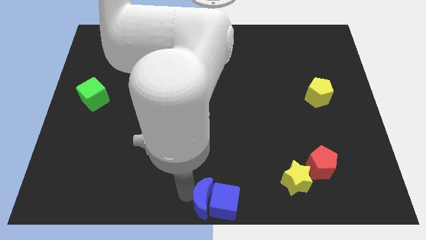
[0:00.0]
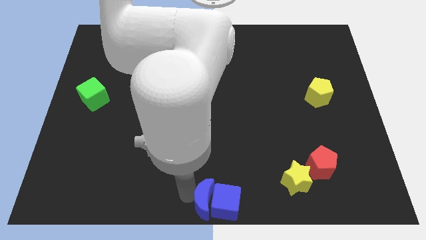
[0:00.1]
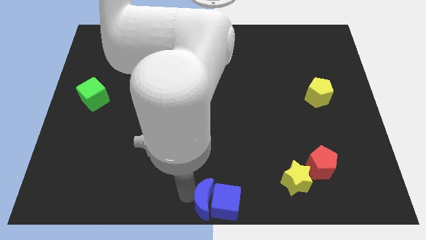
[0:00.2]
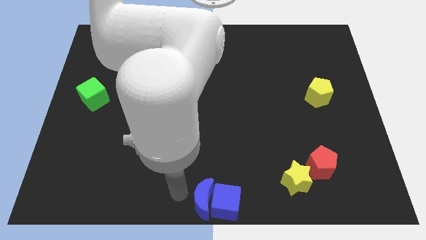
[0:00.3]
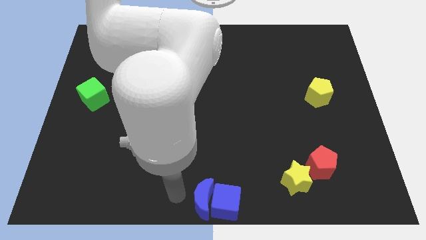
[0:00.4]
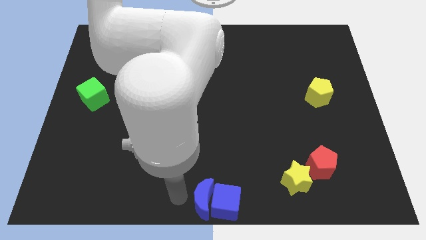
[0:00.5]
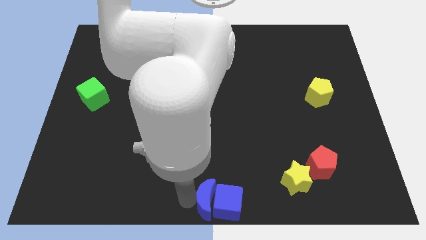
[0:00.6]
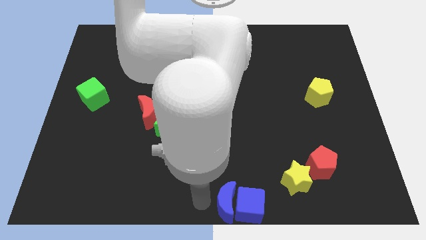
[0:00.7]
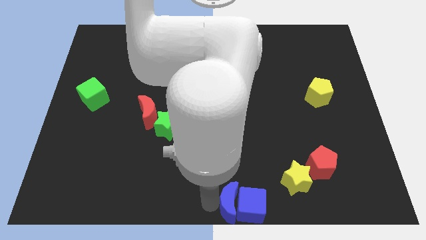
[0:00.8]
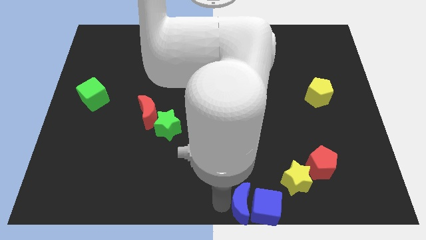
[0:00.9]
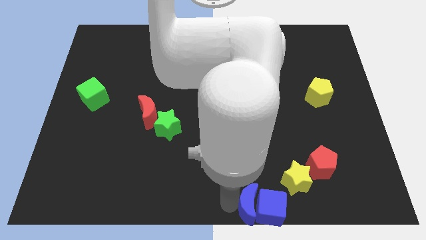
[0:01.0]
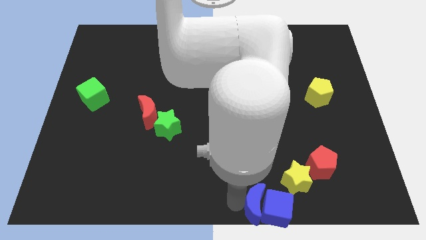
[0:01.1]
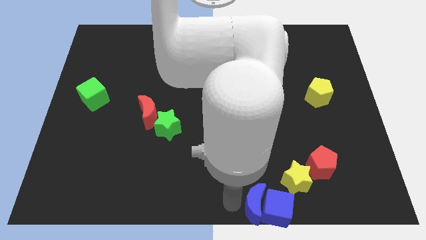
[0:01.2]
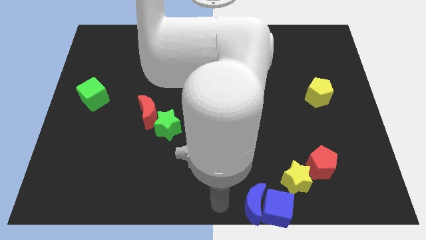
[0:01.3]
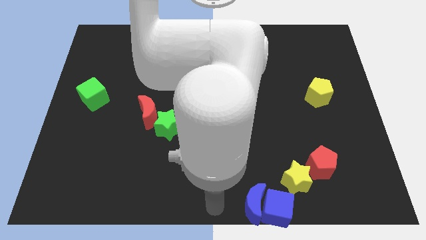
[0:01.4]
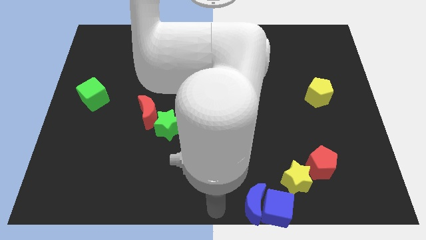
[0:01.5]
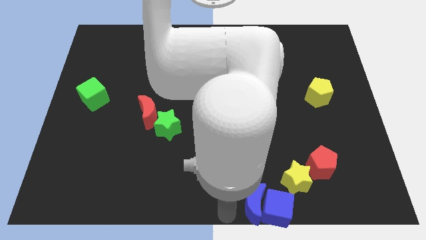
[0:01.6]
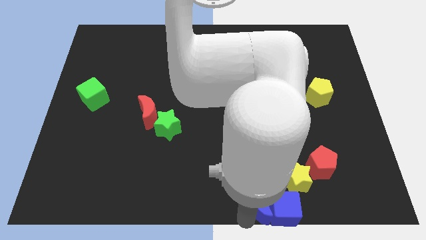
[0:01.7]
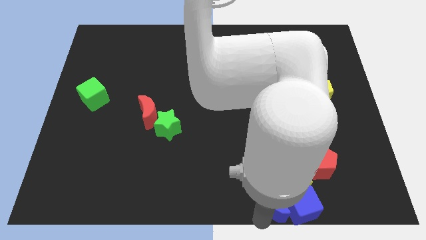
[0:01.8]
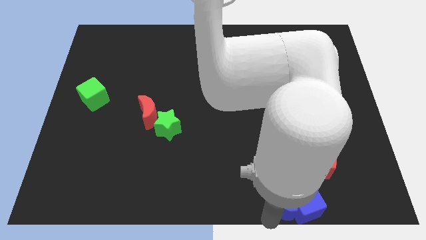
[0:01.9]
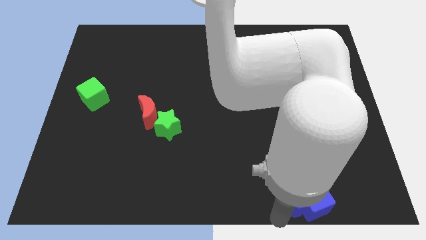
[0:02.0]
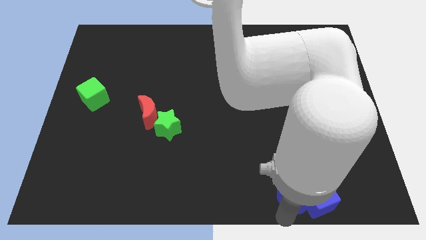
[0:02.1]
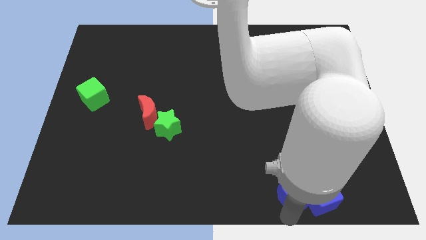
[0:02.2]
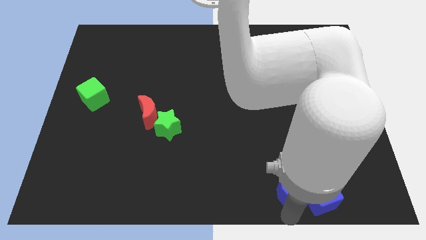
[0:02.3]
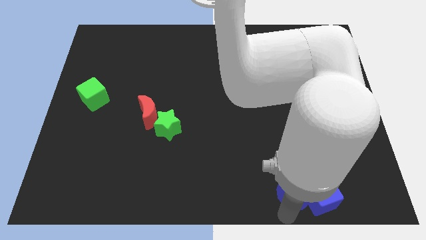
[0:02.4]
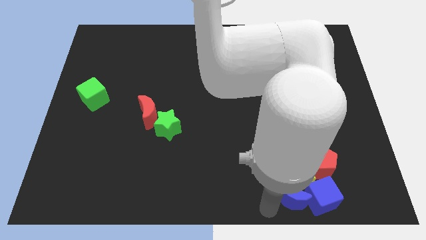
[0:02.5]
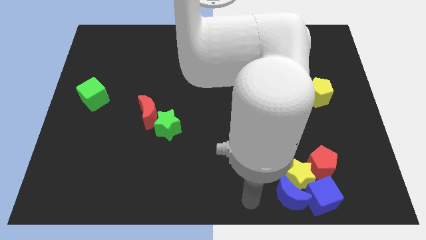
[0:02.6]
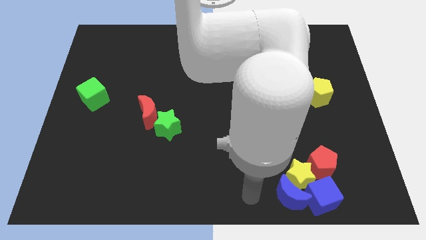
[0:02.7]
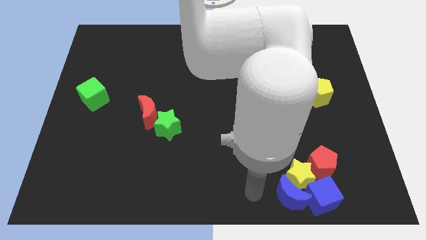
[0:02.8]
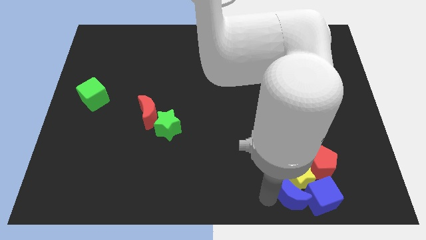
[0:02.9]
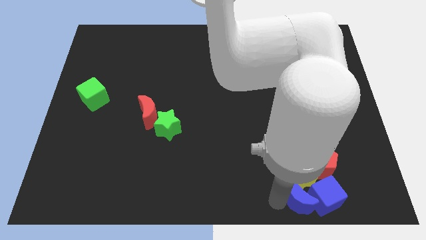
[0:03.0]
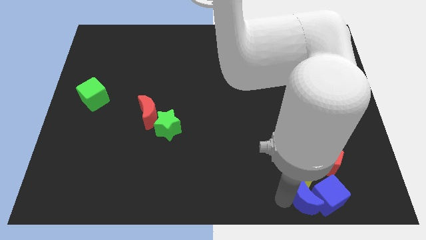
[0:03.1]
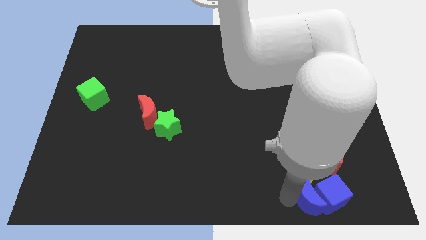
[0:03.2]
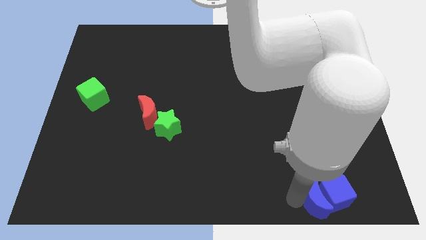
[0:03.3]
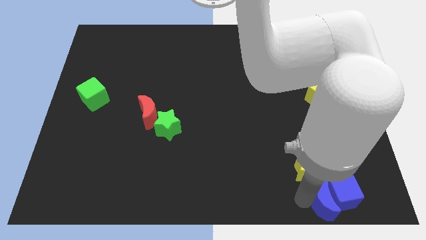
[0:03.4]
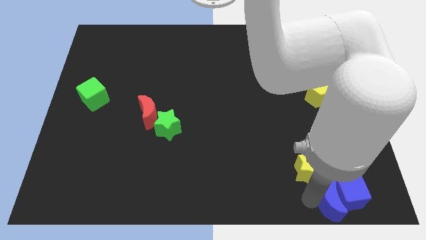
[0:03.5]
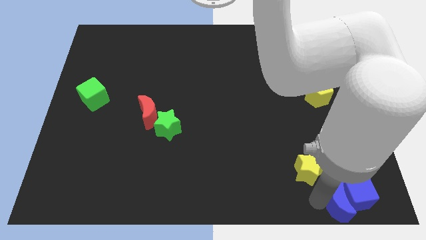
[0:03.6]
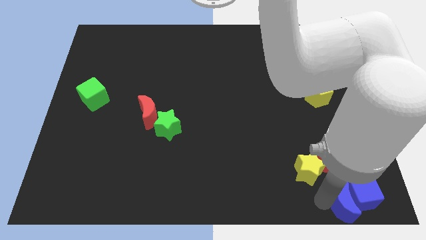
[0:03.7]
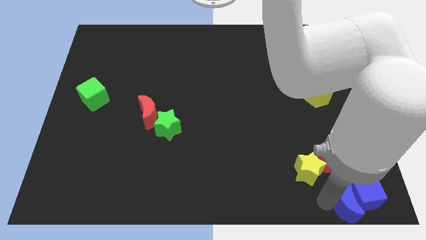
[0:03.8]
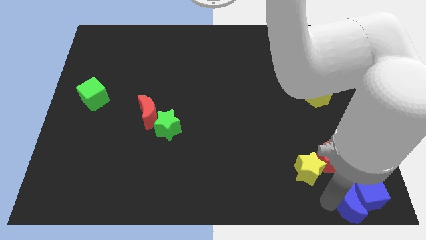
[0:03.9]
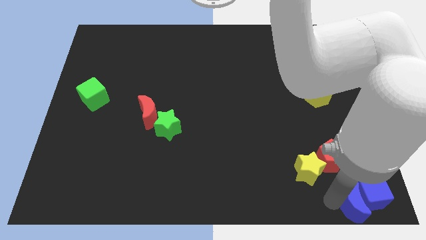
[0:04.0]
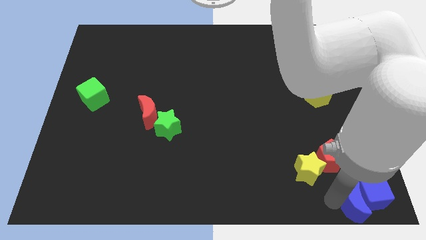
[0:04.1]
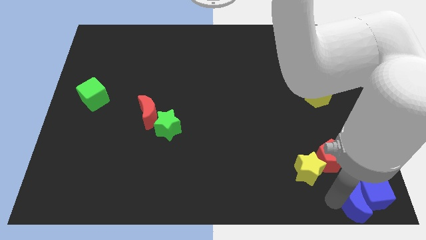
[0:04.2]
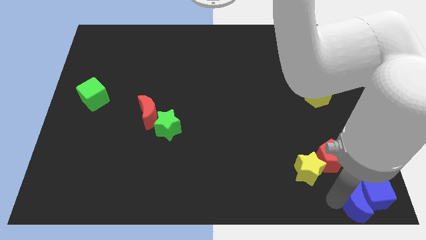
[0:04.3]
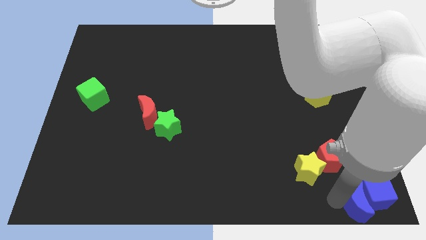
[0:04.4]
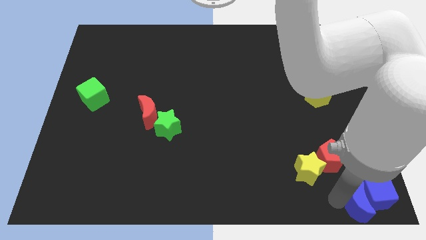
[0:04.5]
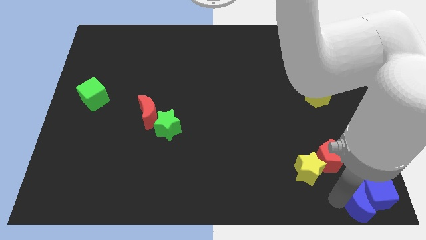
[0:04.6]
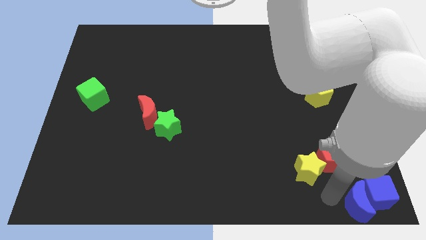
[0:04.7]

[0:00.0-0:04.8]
push the blue blocks to the bottom right side

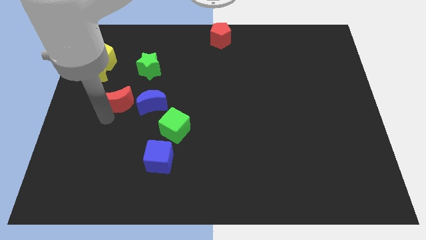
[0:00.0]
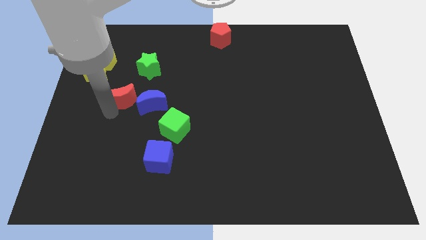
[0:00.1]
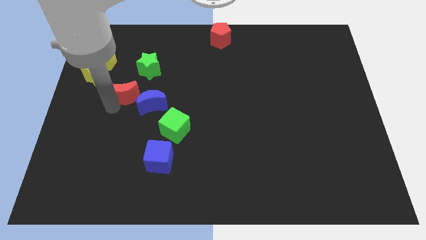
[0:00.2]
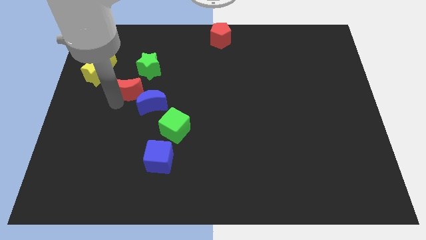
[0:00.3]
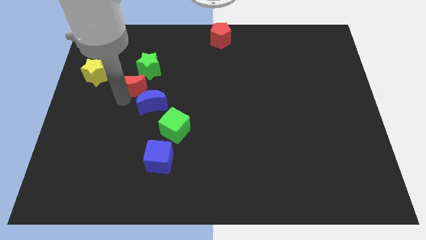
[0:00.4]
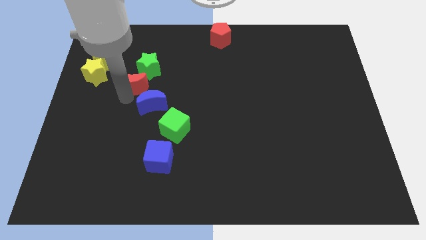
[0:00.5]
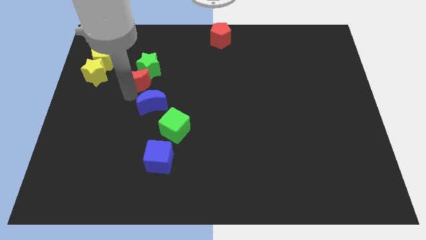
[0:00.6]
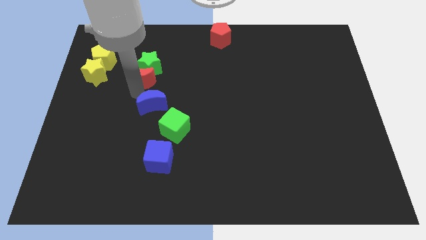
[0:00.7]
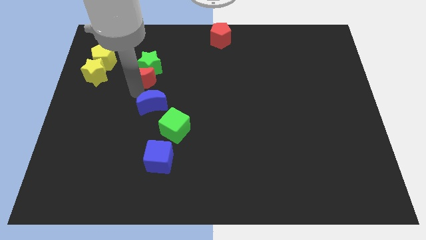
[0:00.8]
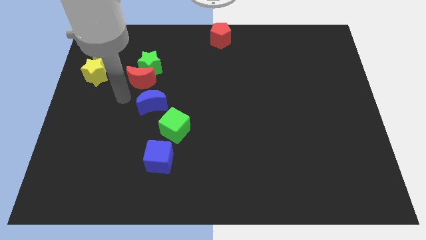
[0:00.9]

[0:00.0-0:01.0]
place the red crescent below the green star

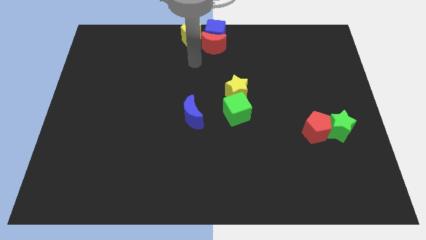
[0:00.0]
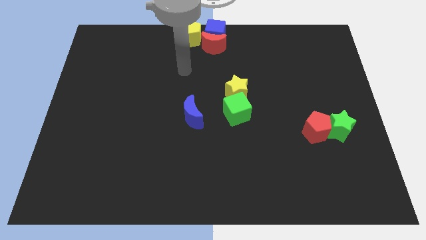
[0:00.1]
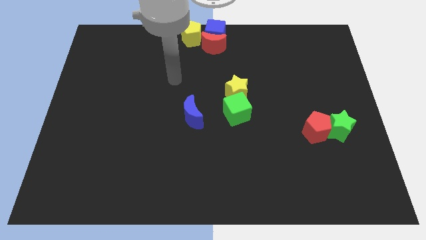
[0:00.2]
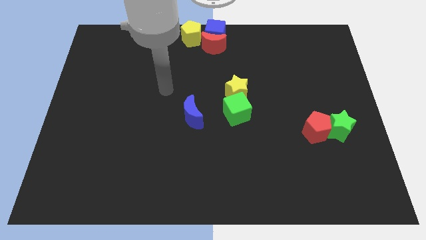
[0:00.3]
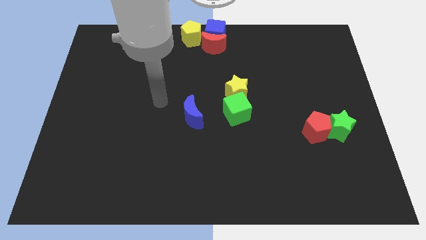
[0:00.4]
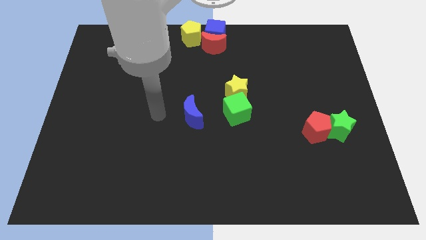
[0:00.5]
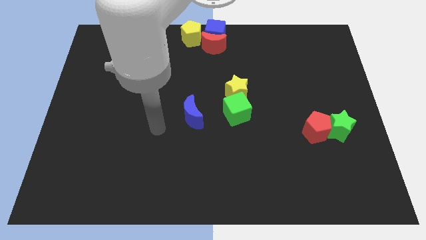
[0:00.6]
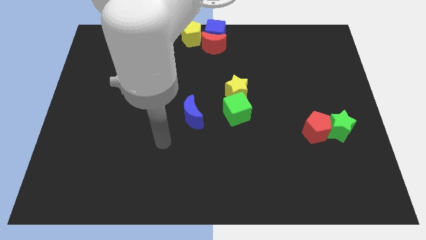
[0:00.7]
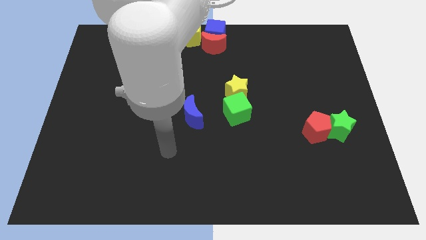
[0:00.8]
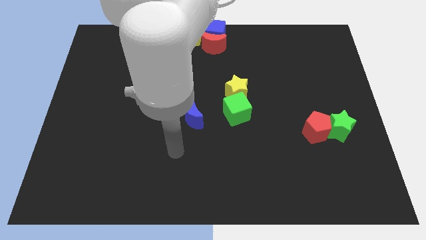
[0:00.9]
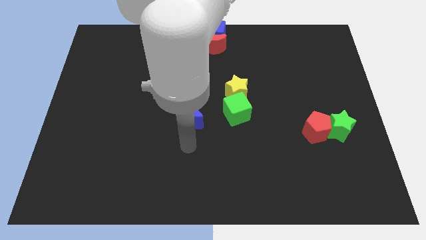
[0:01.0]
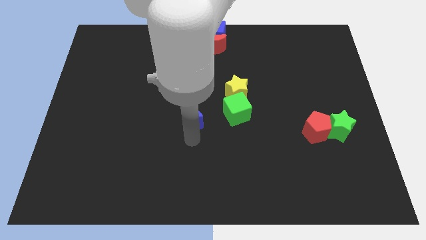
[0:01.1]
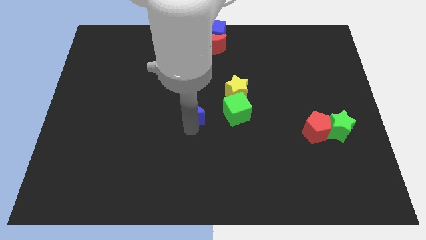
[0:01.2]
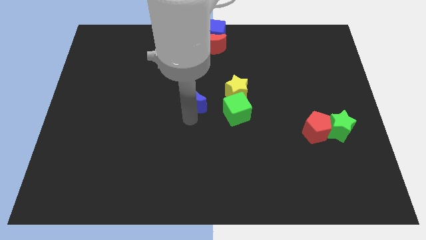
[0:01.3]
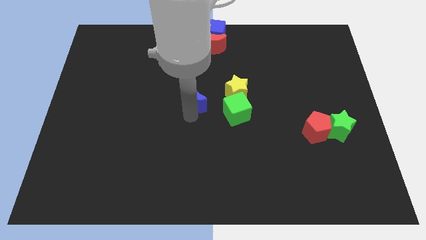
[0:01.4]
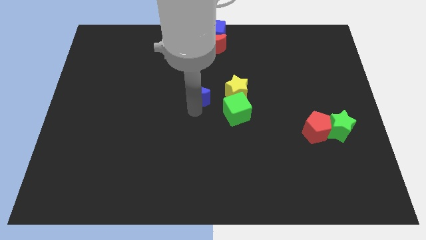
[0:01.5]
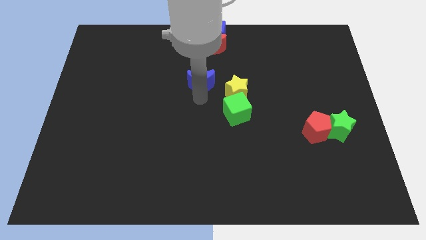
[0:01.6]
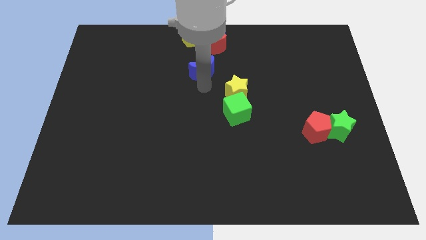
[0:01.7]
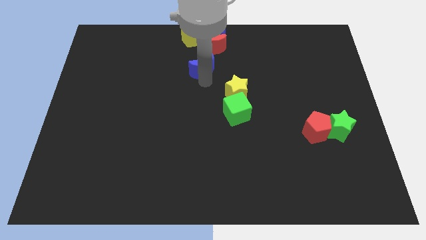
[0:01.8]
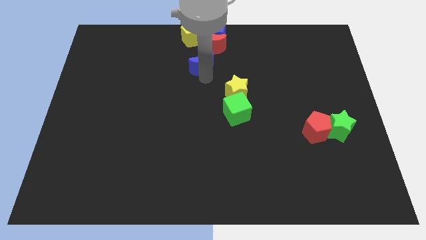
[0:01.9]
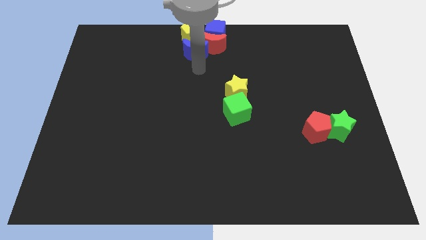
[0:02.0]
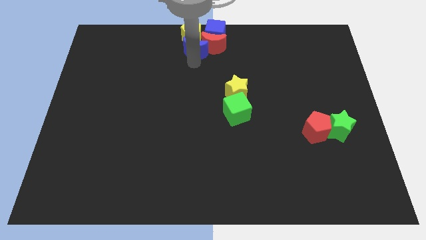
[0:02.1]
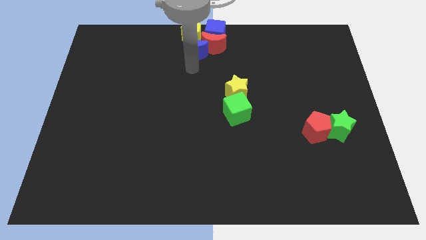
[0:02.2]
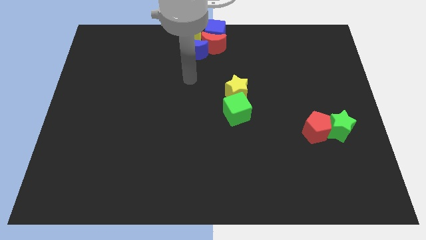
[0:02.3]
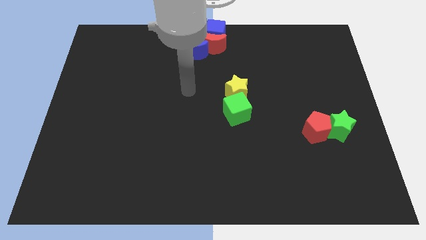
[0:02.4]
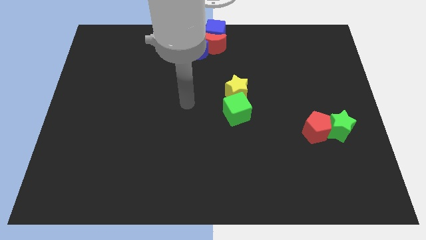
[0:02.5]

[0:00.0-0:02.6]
push the blue crescent to the bottom of the yellow pentagon

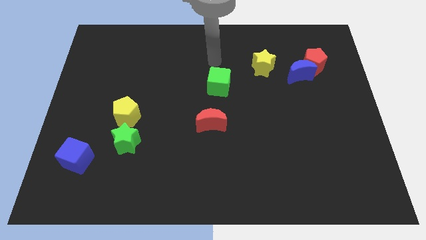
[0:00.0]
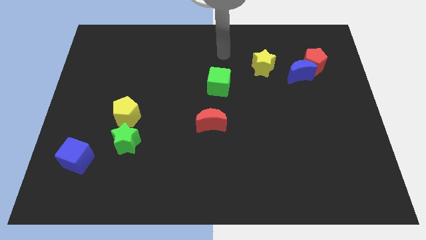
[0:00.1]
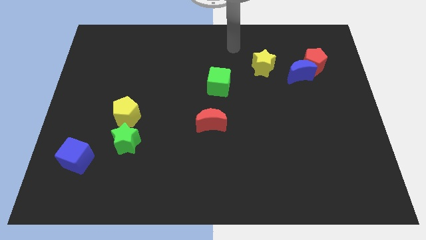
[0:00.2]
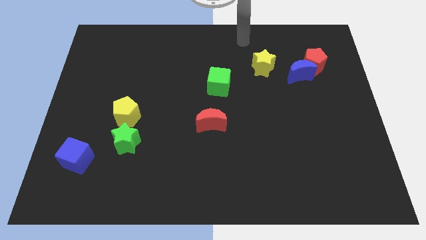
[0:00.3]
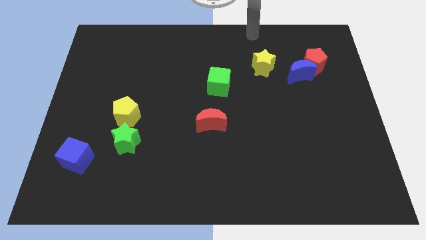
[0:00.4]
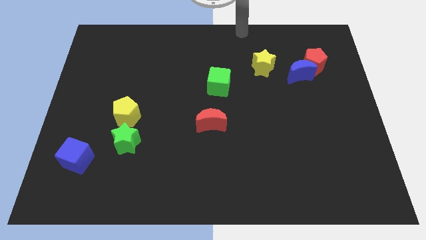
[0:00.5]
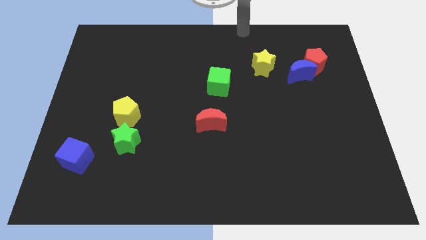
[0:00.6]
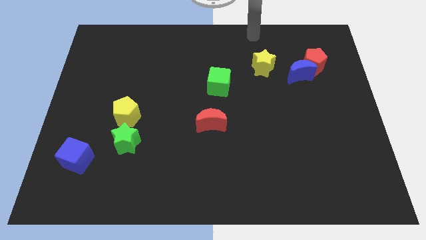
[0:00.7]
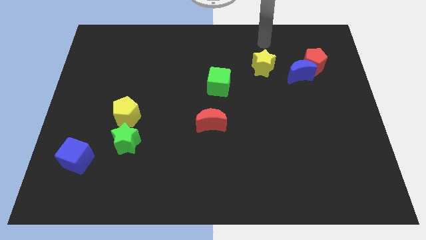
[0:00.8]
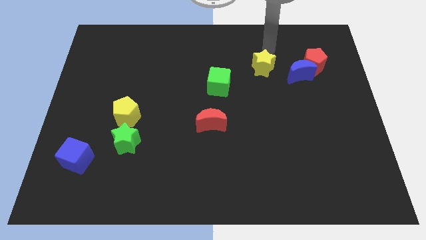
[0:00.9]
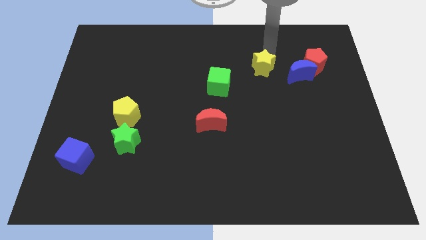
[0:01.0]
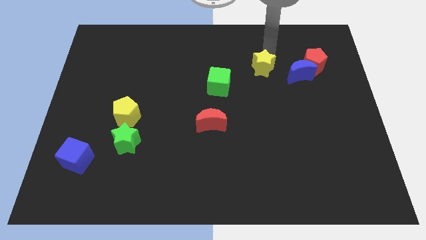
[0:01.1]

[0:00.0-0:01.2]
go near the yellow star
